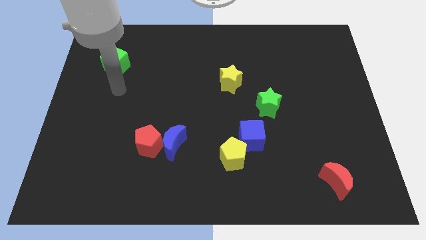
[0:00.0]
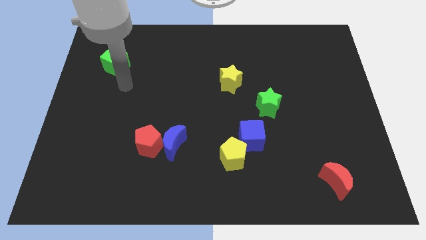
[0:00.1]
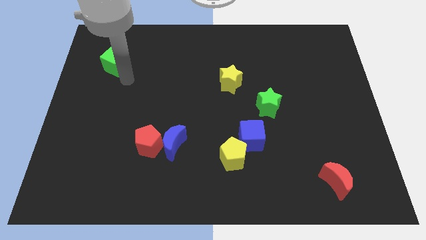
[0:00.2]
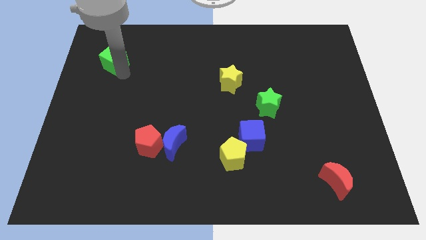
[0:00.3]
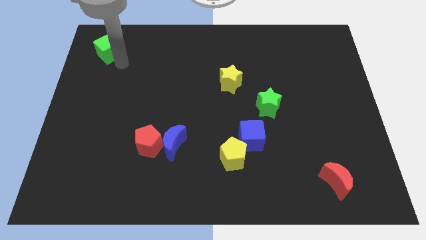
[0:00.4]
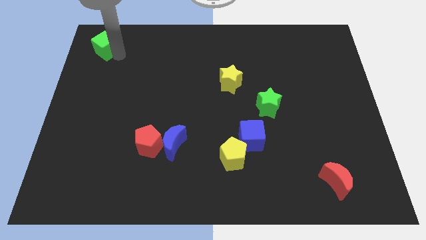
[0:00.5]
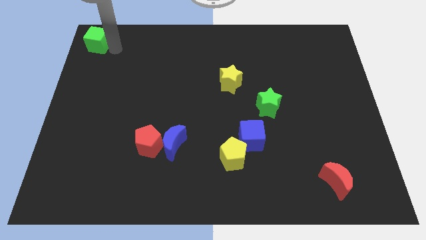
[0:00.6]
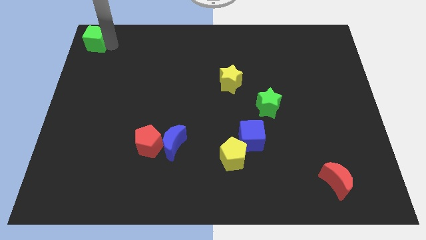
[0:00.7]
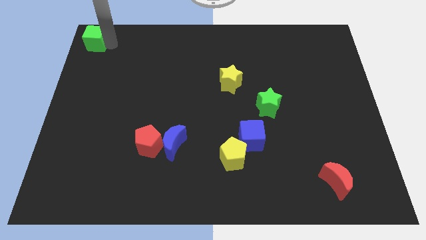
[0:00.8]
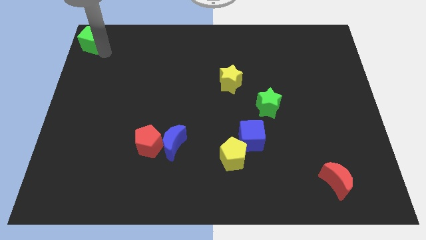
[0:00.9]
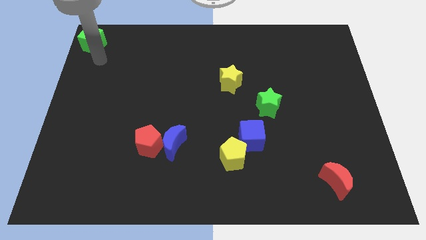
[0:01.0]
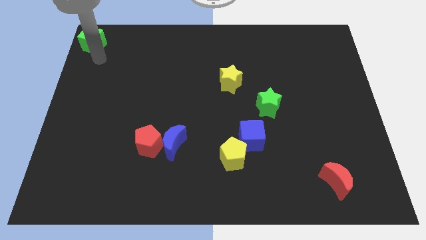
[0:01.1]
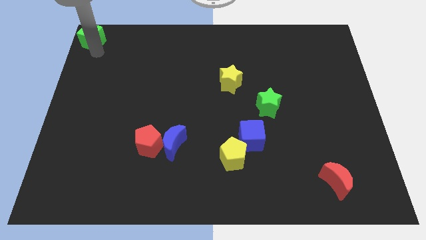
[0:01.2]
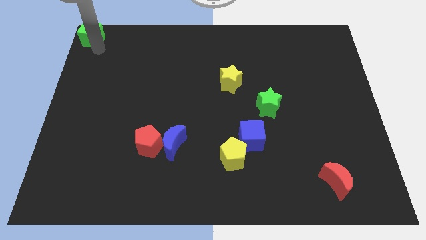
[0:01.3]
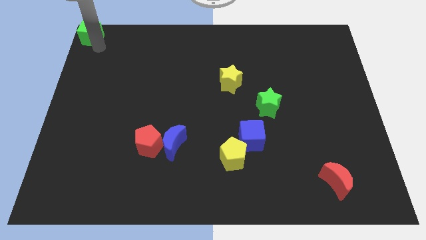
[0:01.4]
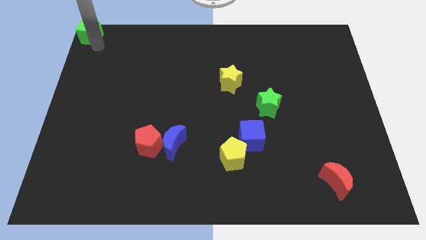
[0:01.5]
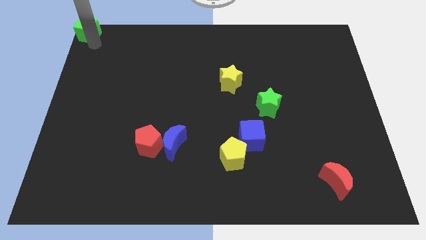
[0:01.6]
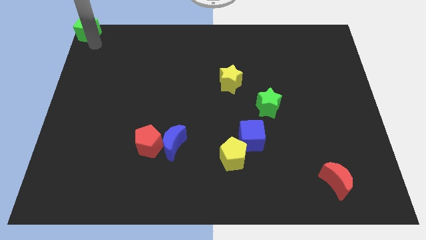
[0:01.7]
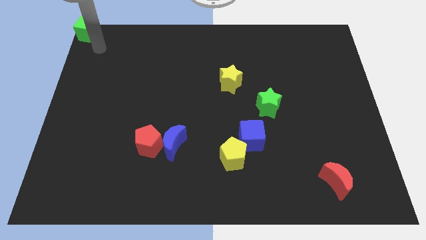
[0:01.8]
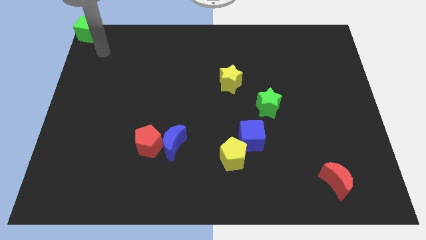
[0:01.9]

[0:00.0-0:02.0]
place the green cube at the top left corner of the board

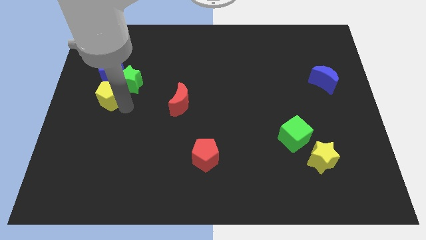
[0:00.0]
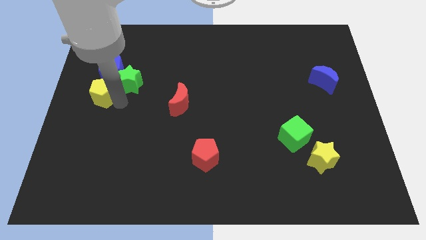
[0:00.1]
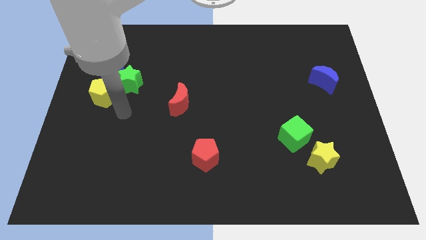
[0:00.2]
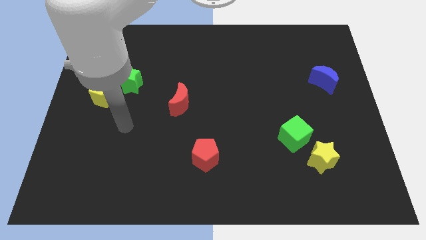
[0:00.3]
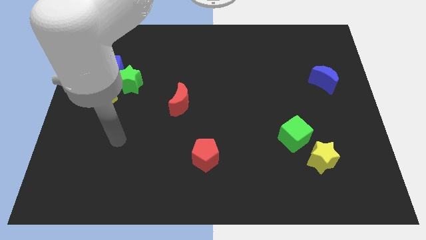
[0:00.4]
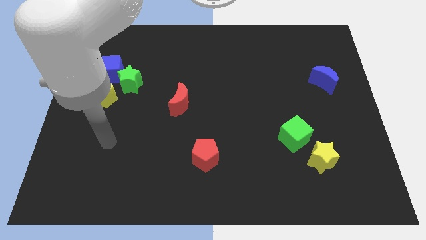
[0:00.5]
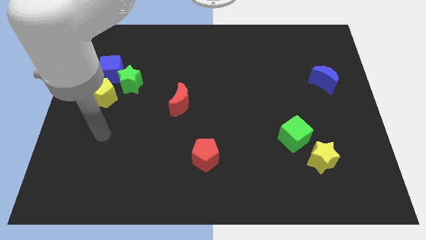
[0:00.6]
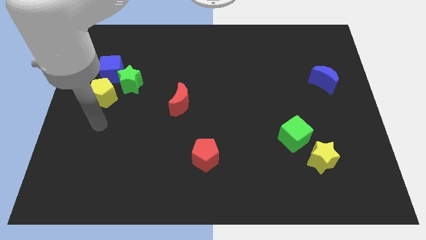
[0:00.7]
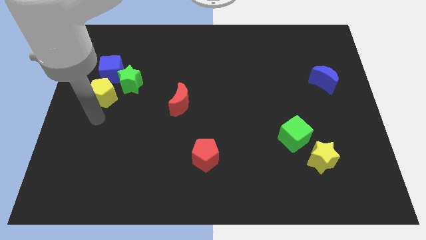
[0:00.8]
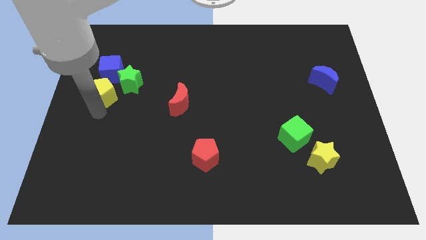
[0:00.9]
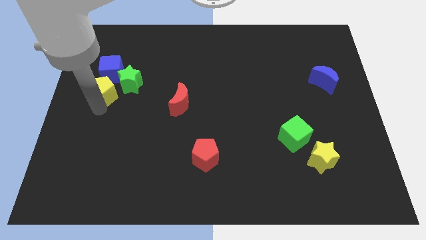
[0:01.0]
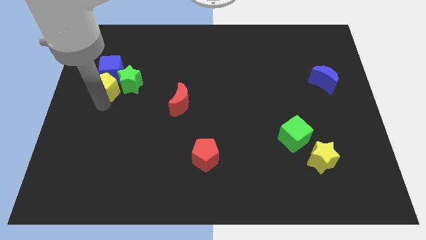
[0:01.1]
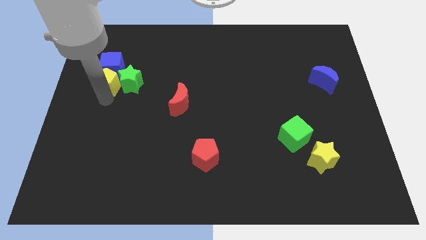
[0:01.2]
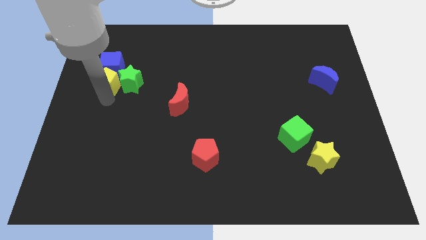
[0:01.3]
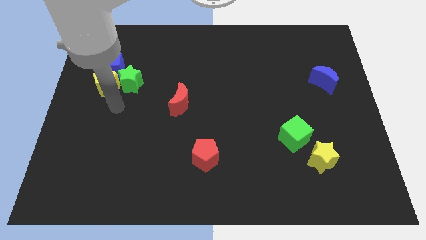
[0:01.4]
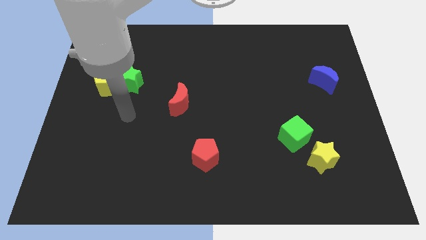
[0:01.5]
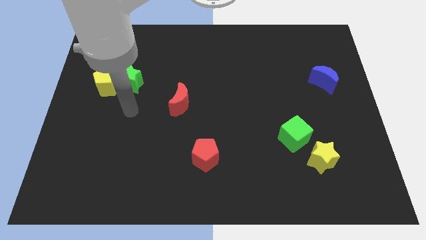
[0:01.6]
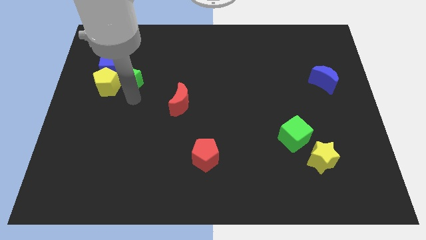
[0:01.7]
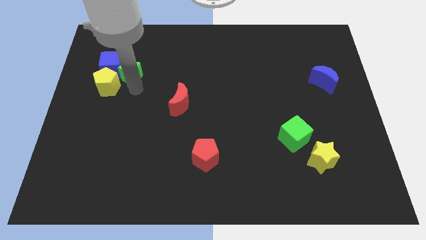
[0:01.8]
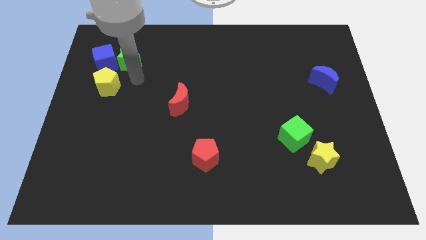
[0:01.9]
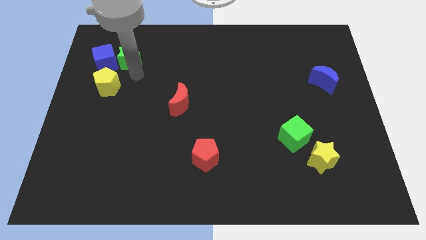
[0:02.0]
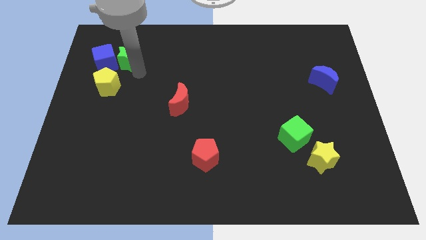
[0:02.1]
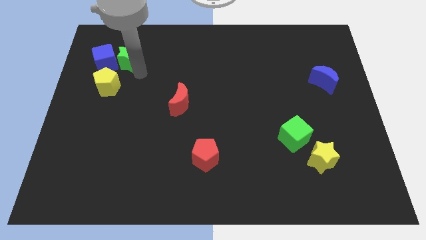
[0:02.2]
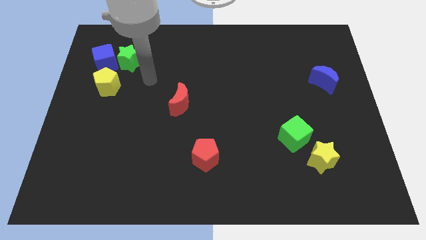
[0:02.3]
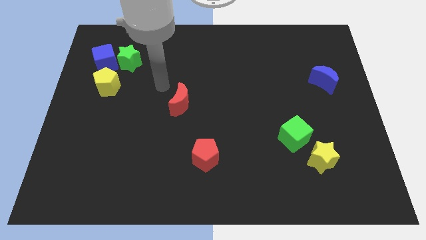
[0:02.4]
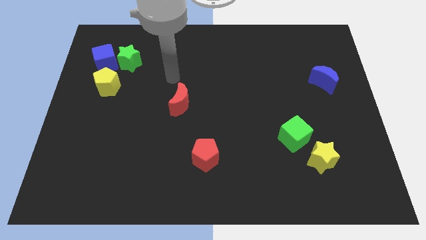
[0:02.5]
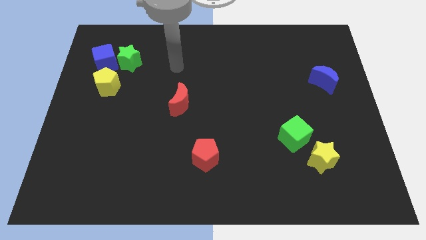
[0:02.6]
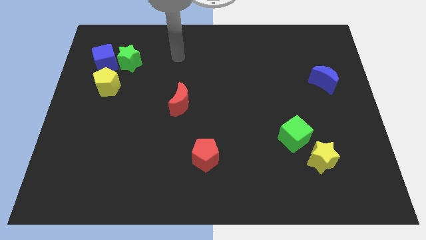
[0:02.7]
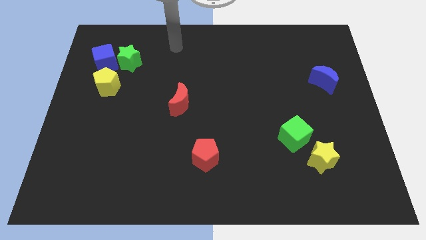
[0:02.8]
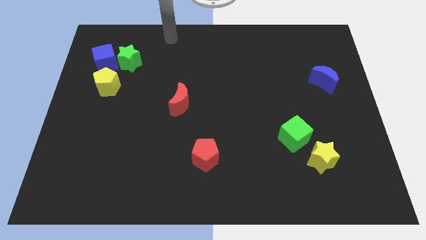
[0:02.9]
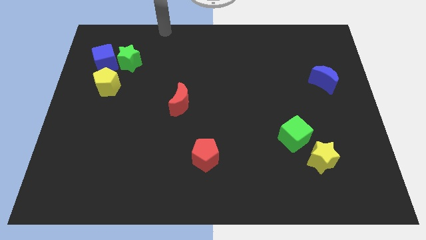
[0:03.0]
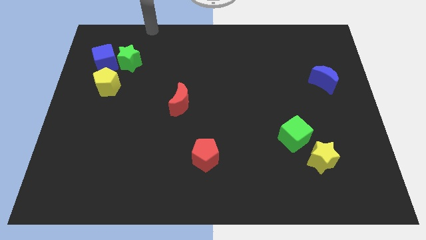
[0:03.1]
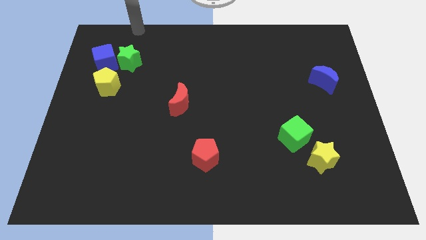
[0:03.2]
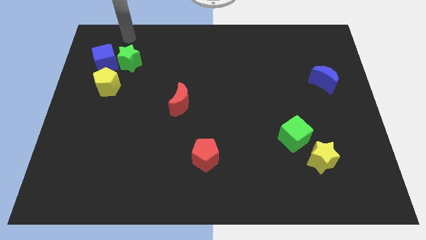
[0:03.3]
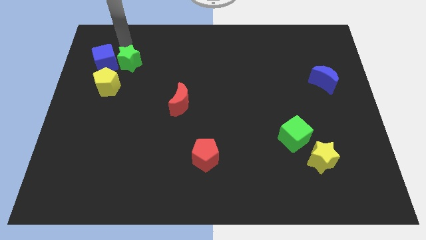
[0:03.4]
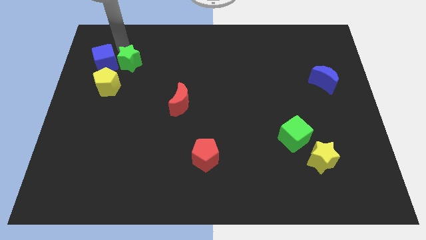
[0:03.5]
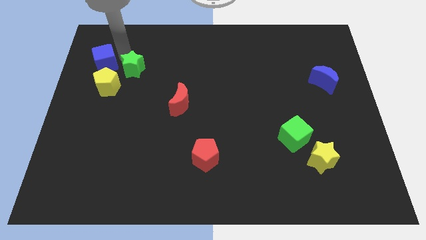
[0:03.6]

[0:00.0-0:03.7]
move green cube yellow pentagon green star blocks slightly up

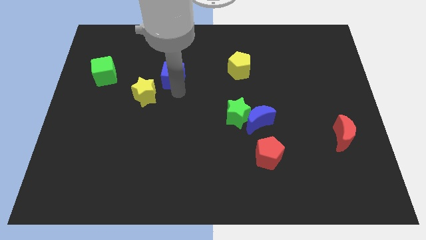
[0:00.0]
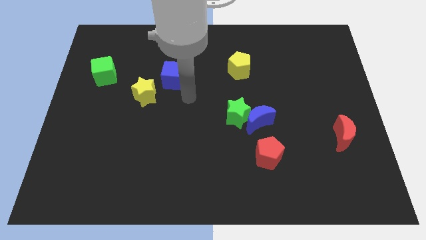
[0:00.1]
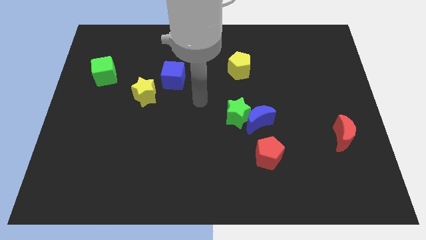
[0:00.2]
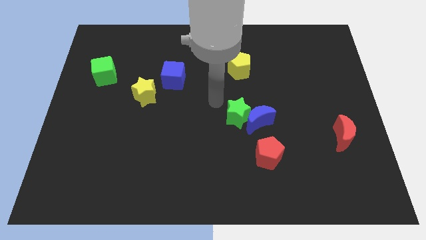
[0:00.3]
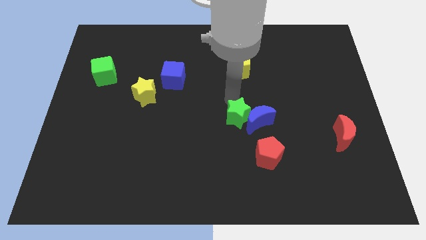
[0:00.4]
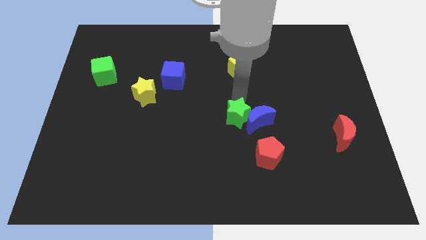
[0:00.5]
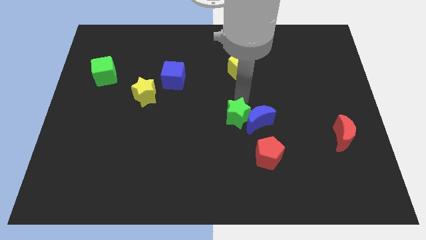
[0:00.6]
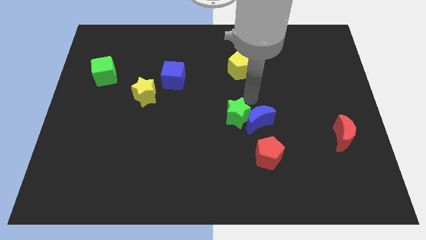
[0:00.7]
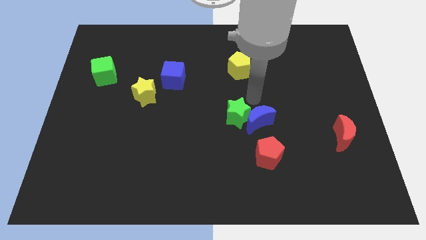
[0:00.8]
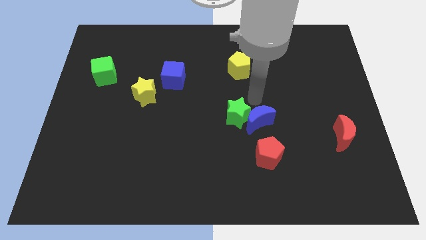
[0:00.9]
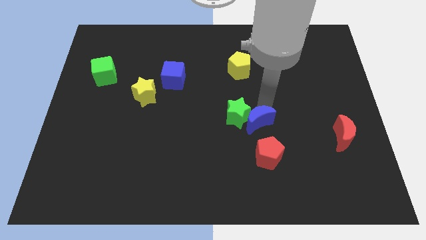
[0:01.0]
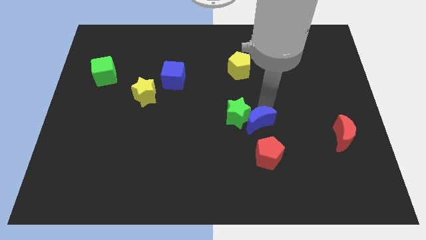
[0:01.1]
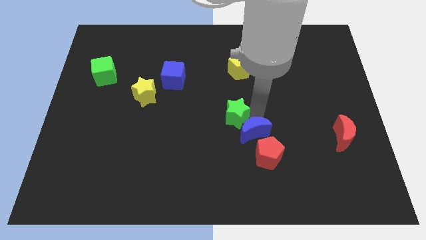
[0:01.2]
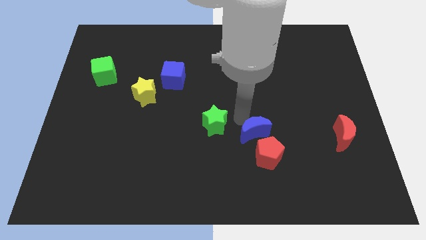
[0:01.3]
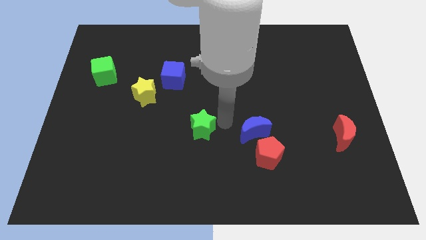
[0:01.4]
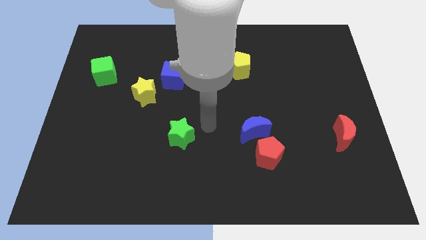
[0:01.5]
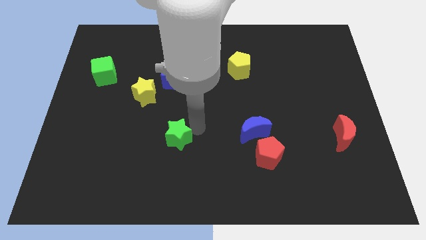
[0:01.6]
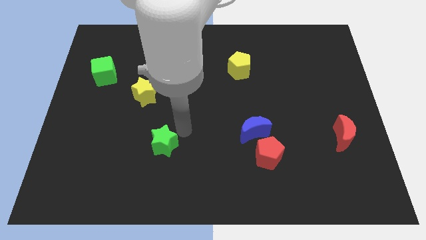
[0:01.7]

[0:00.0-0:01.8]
separate the green star and blue crescent

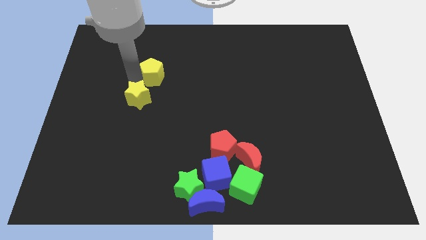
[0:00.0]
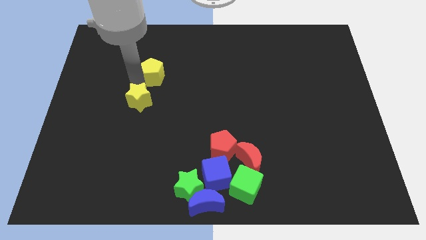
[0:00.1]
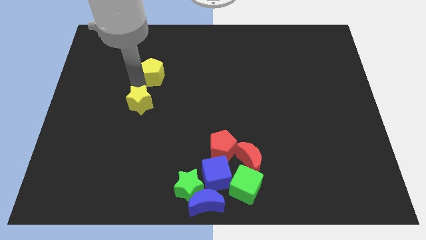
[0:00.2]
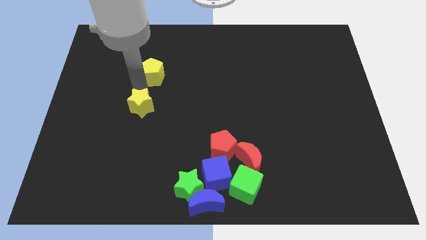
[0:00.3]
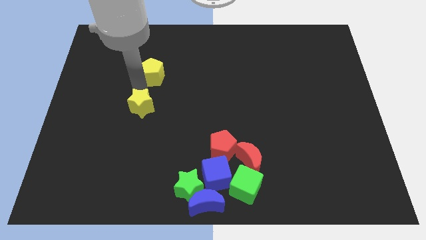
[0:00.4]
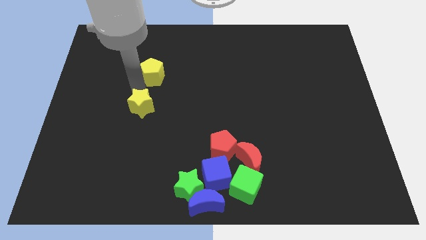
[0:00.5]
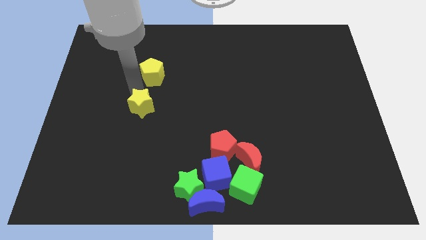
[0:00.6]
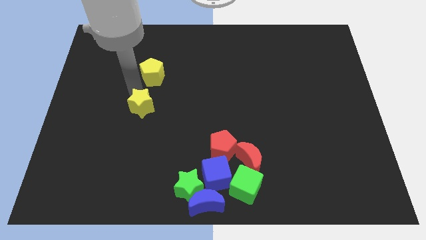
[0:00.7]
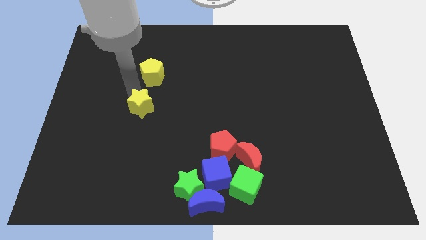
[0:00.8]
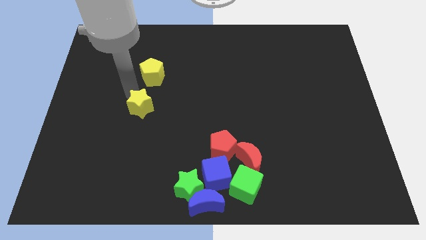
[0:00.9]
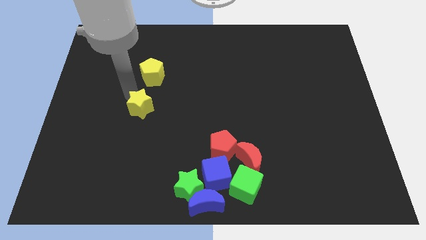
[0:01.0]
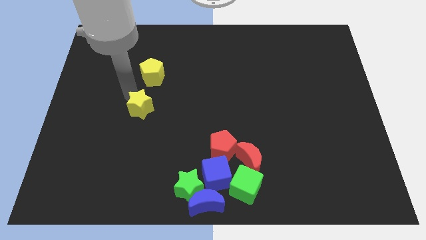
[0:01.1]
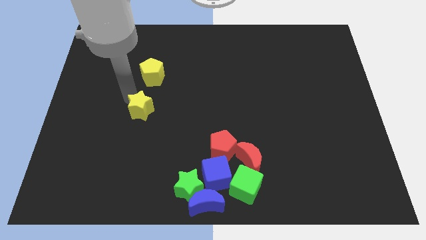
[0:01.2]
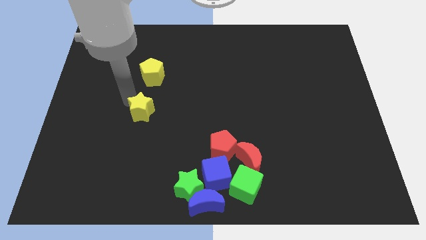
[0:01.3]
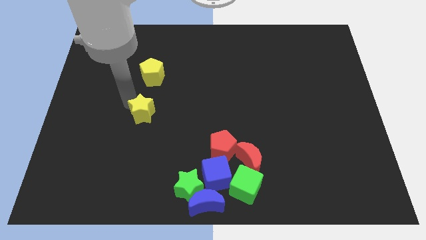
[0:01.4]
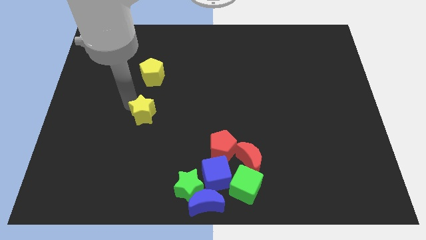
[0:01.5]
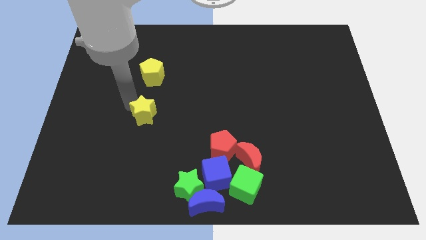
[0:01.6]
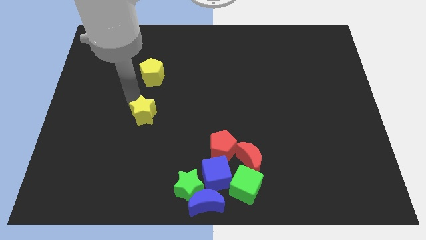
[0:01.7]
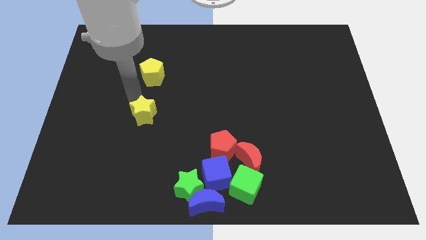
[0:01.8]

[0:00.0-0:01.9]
move the yellow star to the bottom of the yellow pentagon
